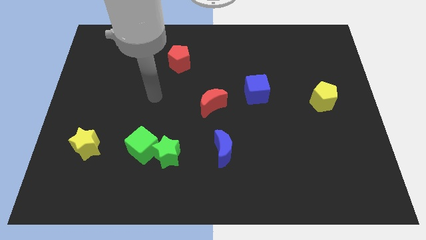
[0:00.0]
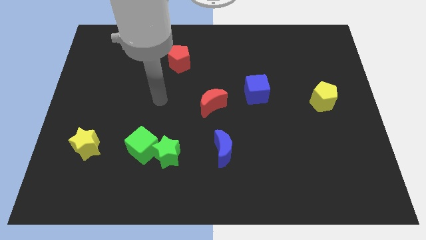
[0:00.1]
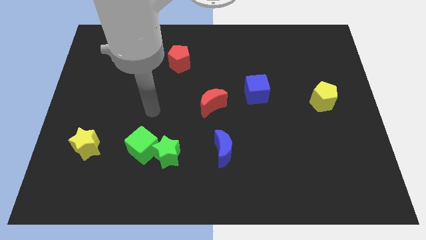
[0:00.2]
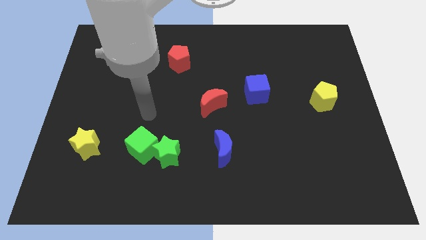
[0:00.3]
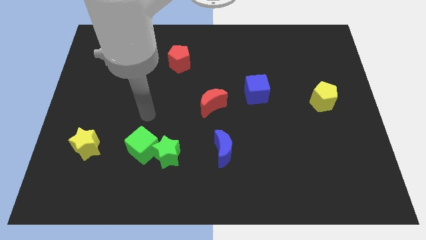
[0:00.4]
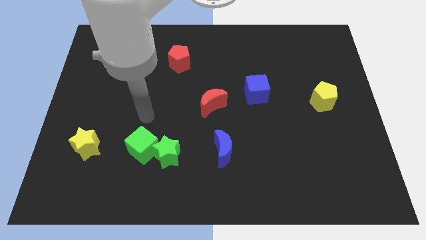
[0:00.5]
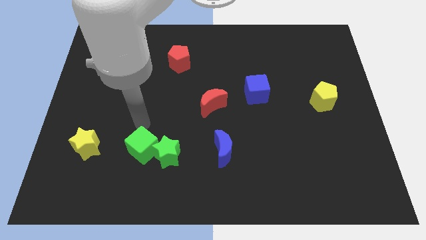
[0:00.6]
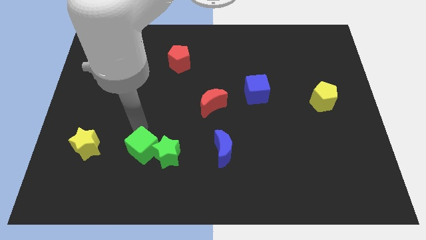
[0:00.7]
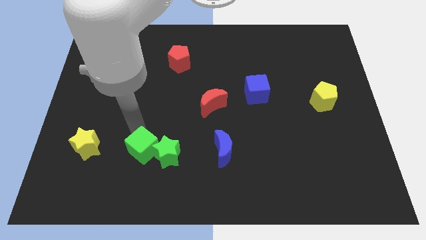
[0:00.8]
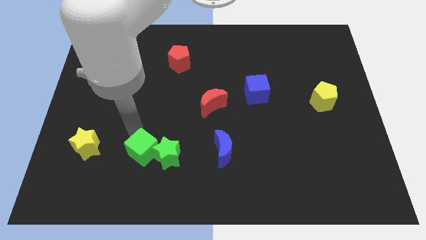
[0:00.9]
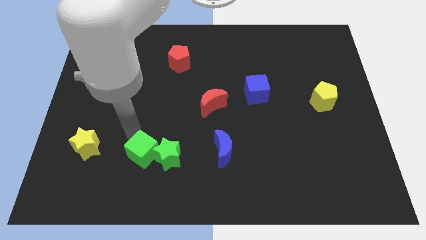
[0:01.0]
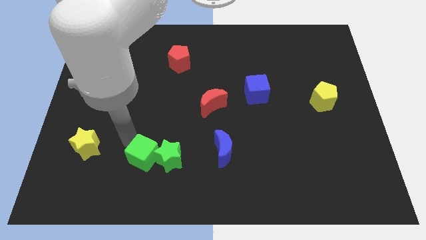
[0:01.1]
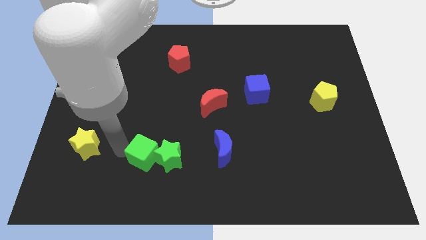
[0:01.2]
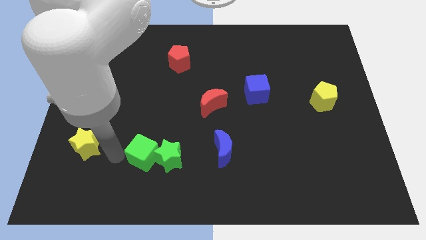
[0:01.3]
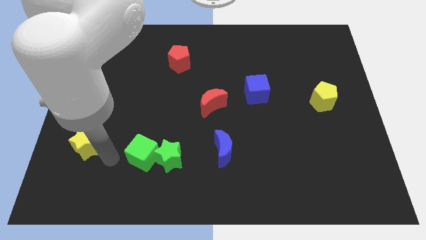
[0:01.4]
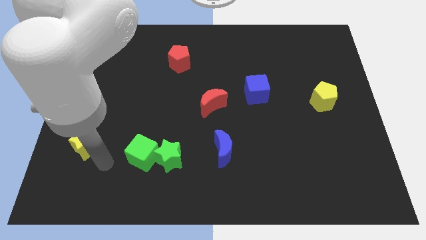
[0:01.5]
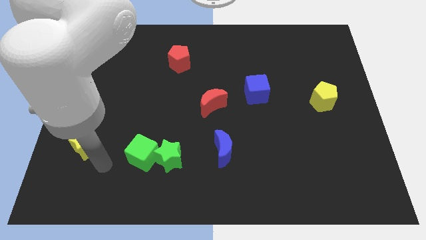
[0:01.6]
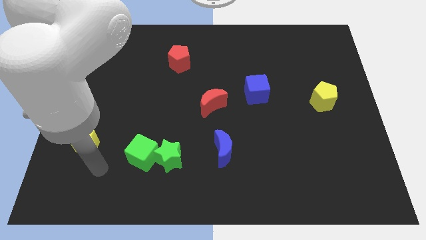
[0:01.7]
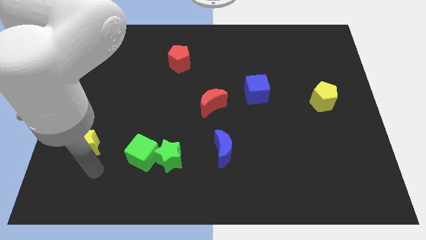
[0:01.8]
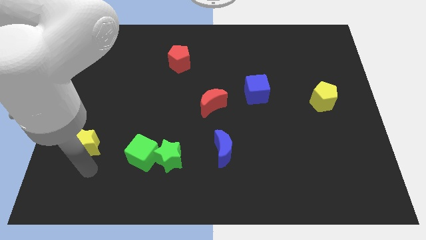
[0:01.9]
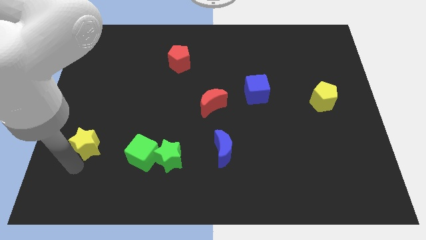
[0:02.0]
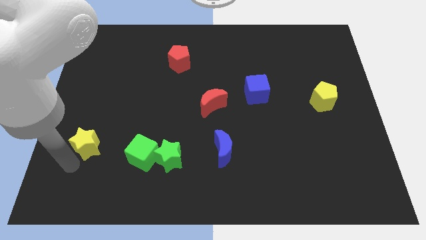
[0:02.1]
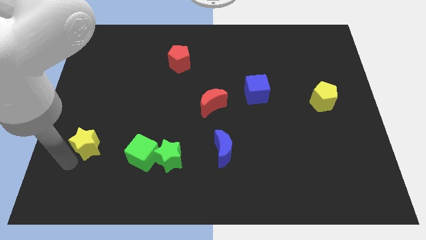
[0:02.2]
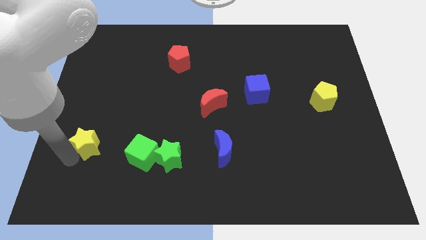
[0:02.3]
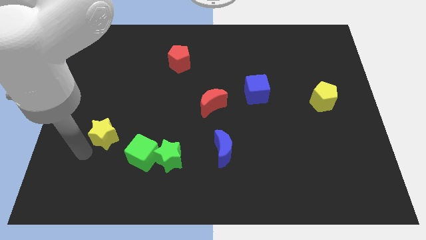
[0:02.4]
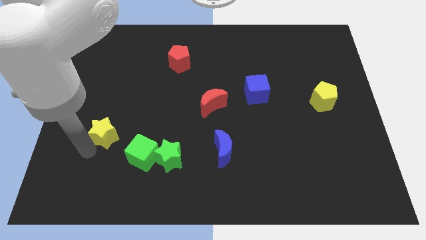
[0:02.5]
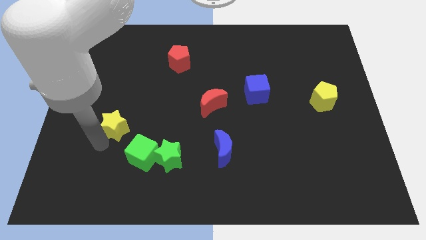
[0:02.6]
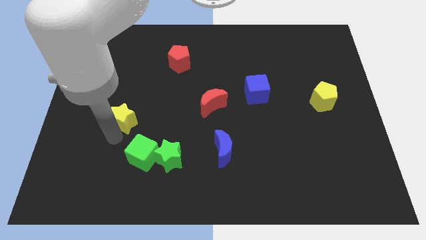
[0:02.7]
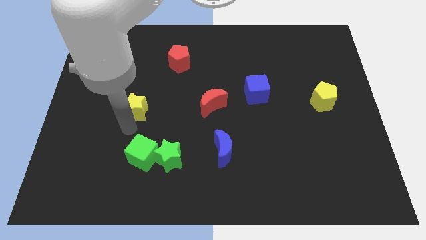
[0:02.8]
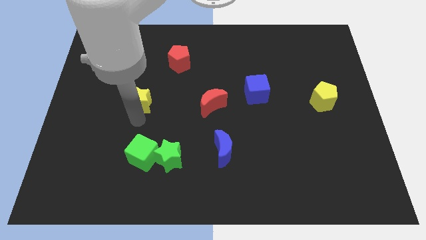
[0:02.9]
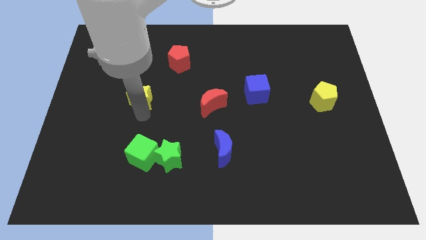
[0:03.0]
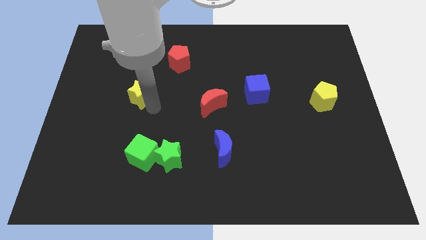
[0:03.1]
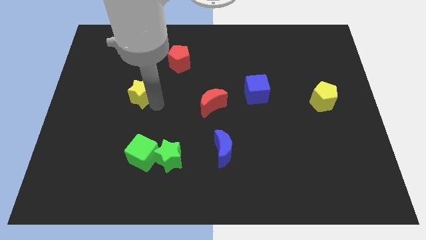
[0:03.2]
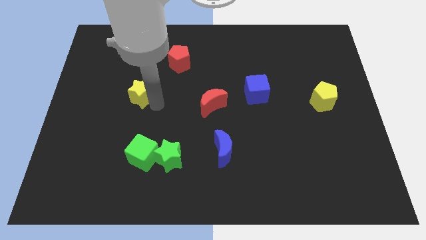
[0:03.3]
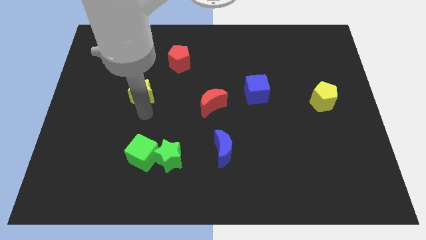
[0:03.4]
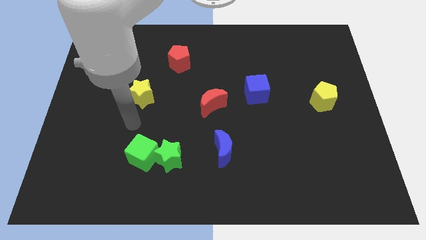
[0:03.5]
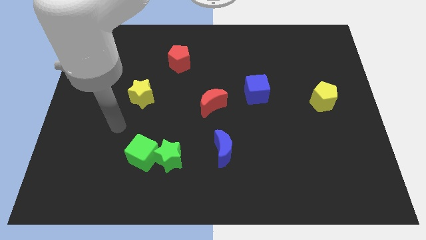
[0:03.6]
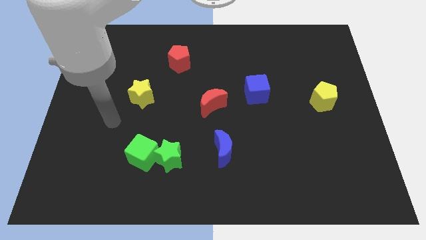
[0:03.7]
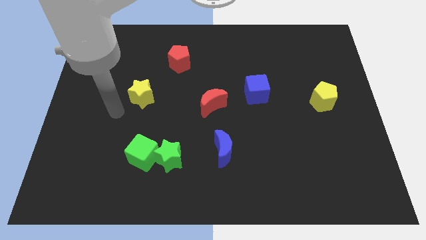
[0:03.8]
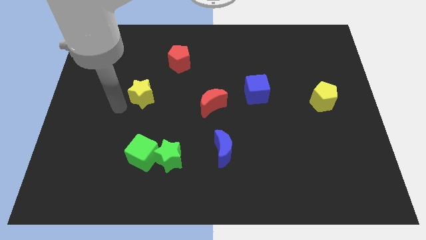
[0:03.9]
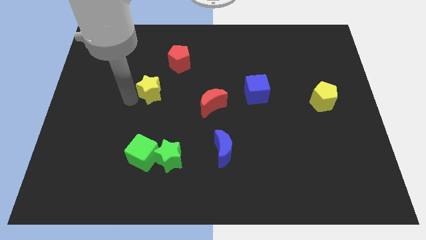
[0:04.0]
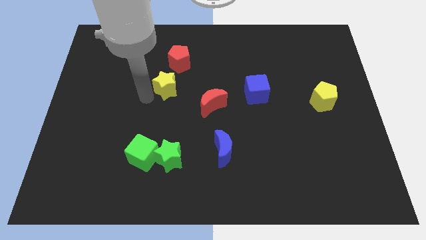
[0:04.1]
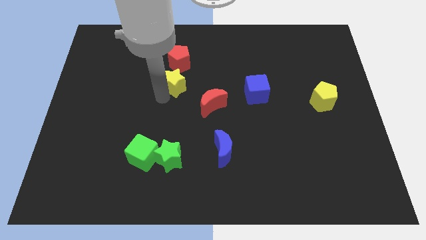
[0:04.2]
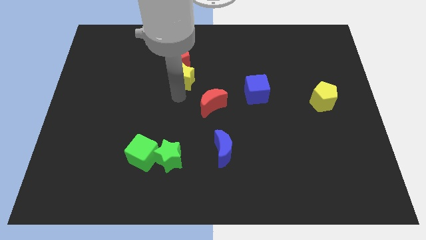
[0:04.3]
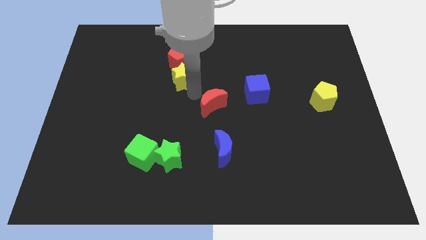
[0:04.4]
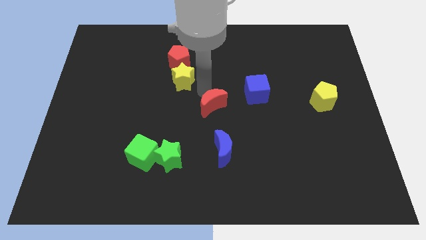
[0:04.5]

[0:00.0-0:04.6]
move the yellow star to touch the red pentagon

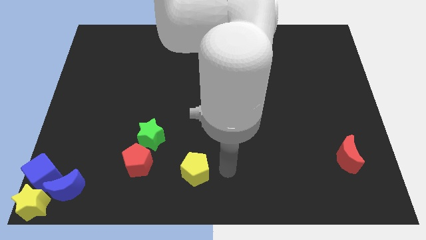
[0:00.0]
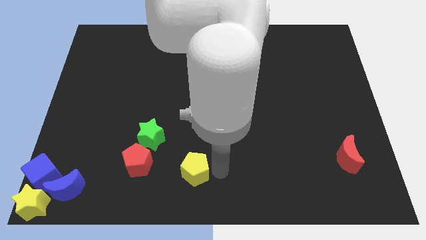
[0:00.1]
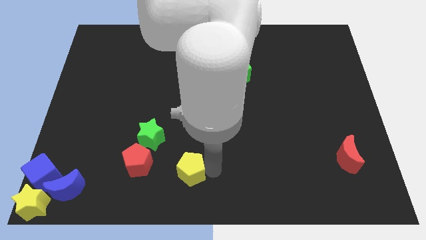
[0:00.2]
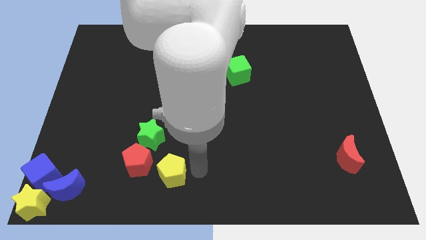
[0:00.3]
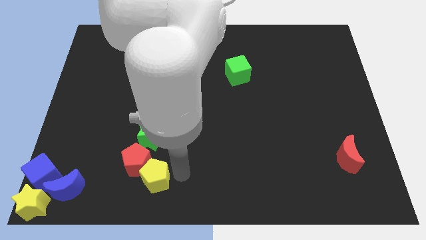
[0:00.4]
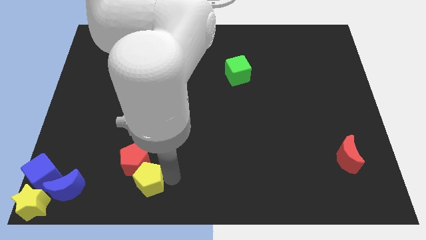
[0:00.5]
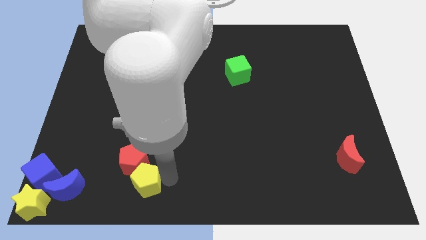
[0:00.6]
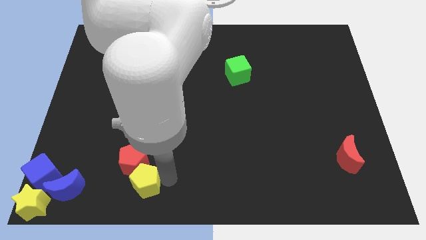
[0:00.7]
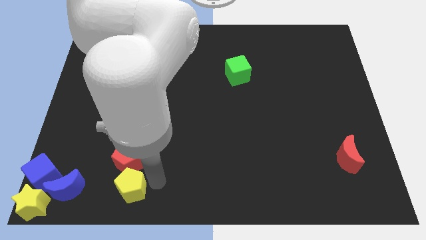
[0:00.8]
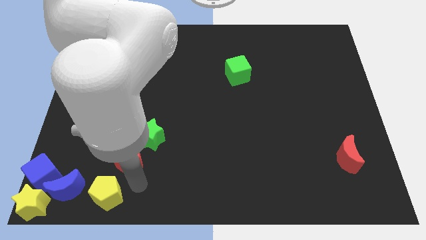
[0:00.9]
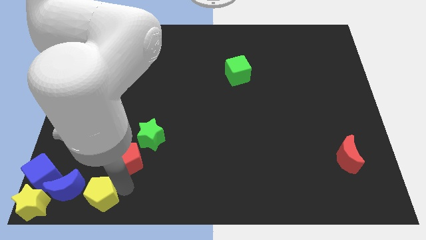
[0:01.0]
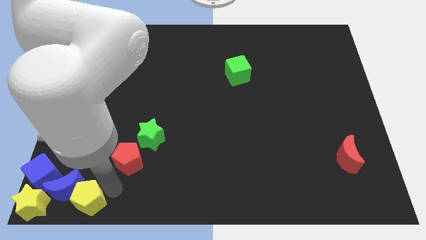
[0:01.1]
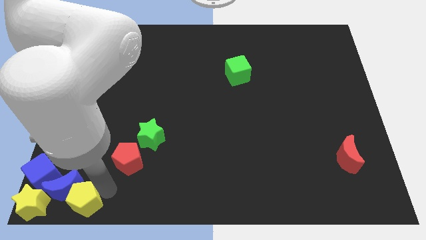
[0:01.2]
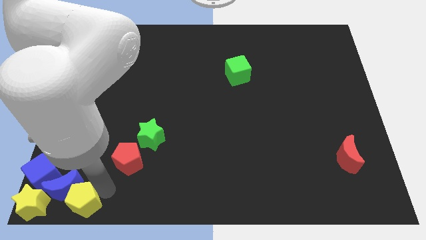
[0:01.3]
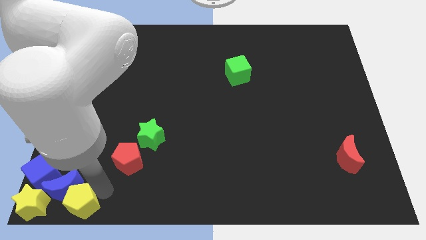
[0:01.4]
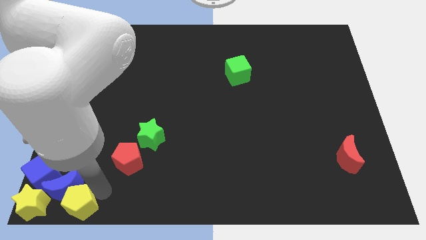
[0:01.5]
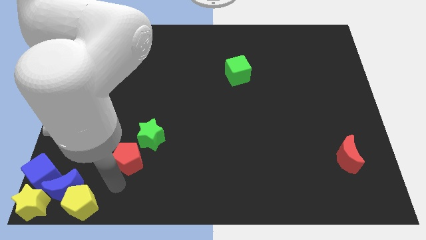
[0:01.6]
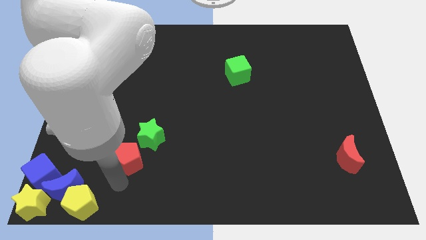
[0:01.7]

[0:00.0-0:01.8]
push the yellow pentagon into the group of blocks

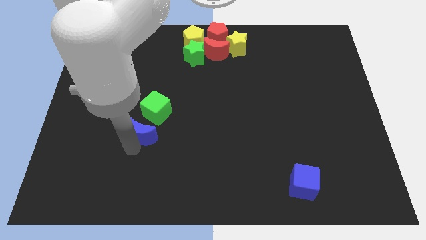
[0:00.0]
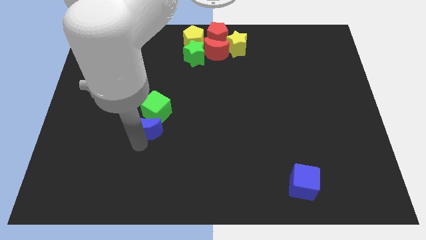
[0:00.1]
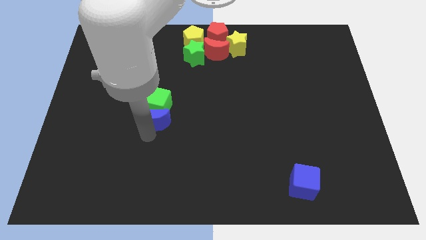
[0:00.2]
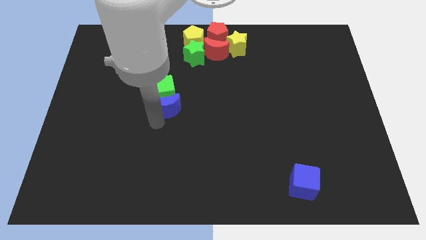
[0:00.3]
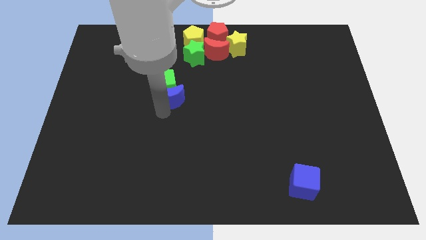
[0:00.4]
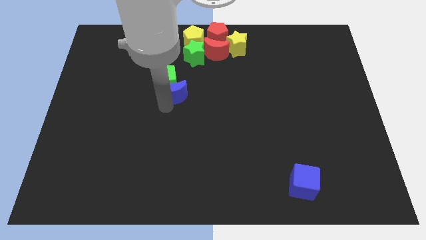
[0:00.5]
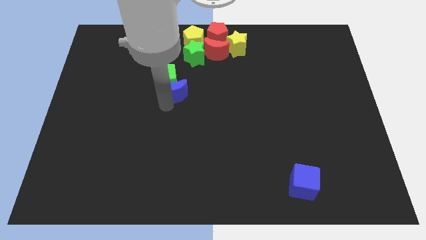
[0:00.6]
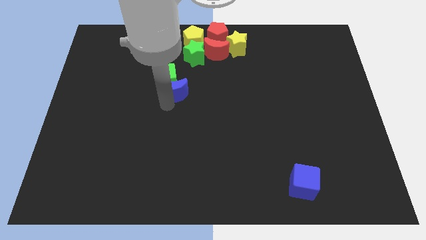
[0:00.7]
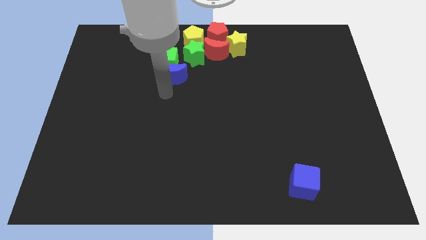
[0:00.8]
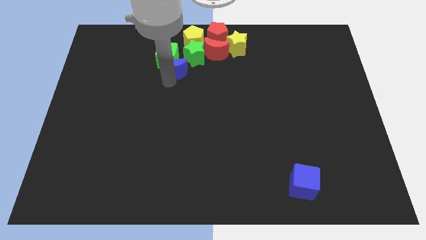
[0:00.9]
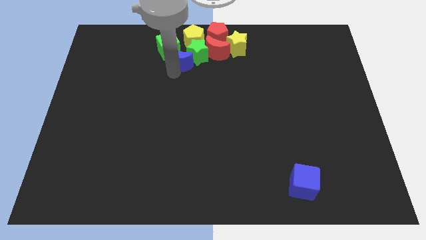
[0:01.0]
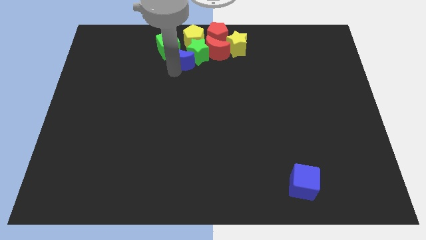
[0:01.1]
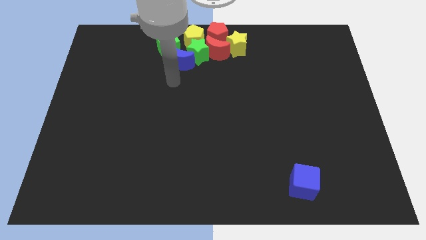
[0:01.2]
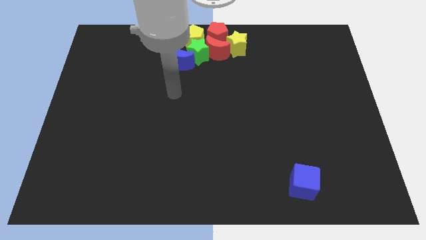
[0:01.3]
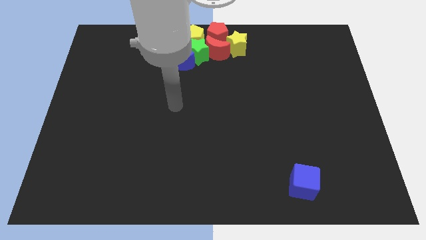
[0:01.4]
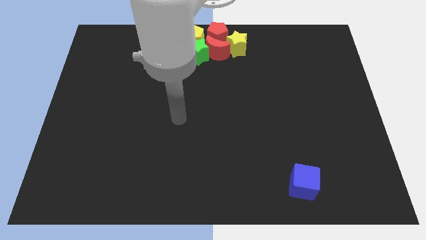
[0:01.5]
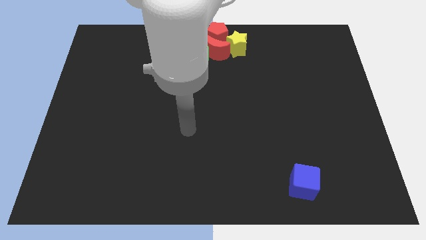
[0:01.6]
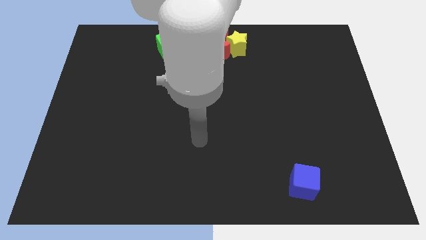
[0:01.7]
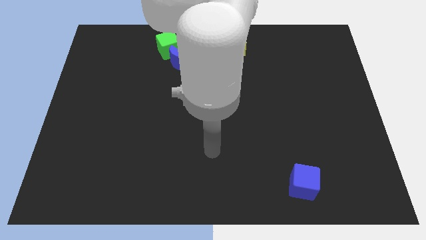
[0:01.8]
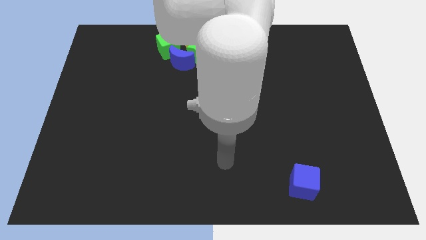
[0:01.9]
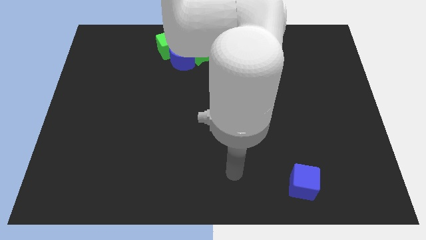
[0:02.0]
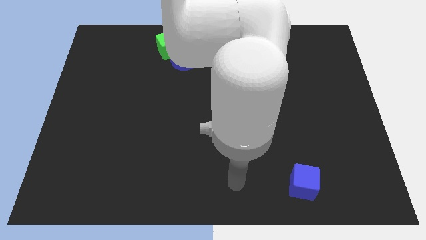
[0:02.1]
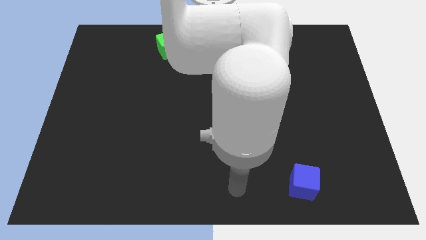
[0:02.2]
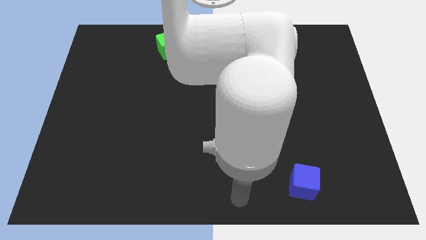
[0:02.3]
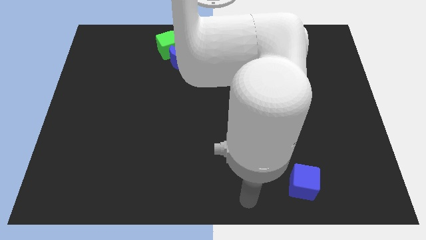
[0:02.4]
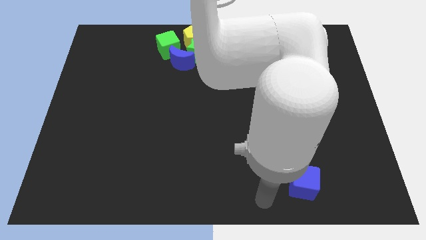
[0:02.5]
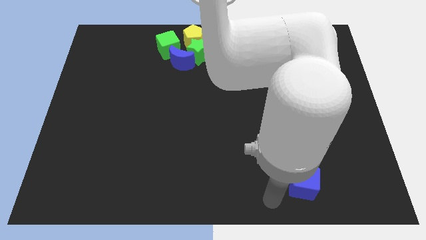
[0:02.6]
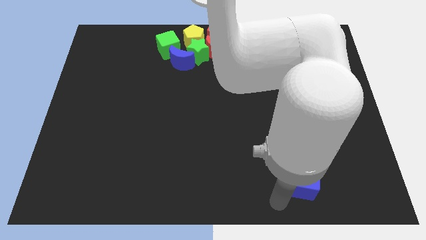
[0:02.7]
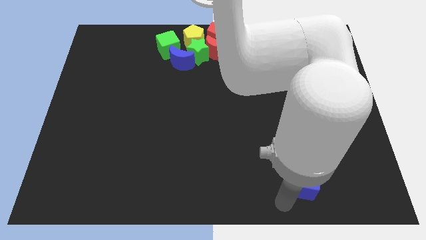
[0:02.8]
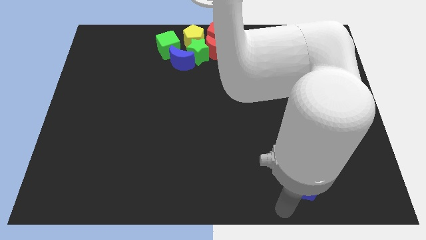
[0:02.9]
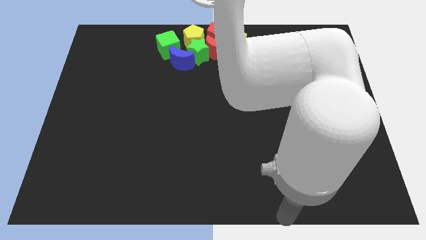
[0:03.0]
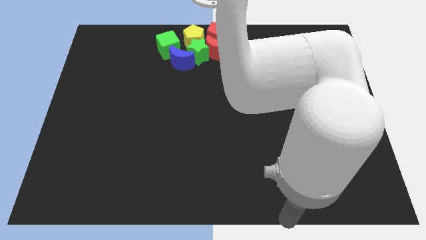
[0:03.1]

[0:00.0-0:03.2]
move blue crescent and green cube to left of the green star
